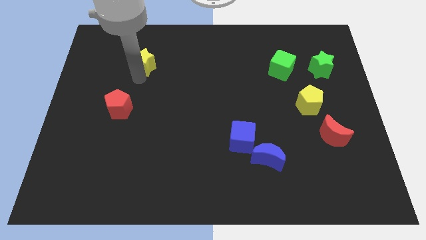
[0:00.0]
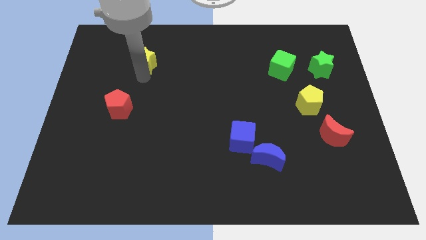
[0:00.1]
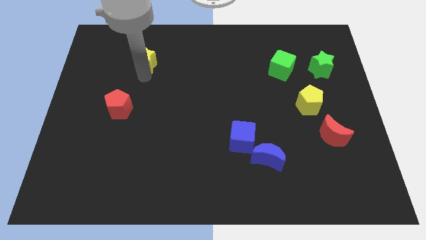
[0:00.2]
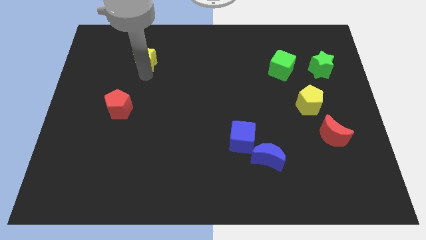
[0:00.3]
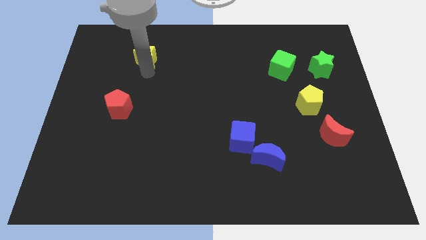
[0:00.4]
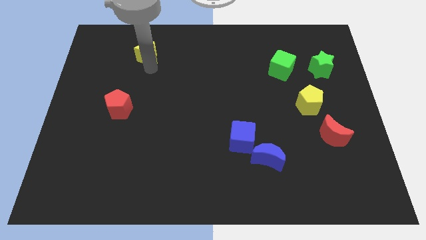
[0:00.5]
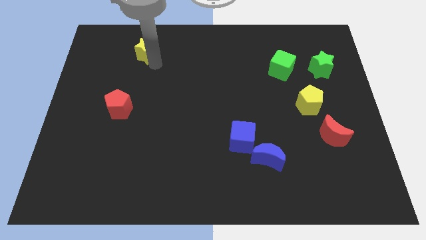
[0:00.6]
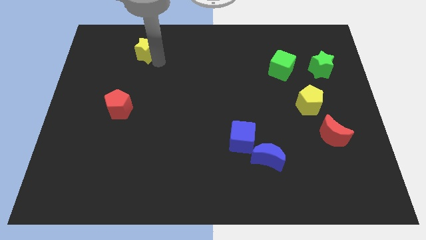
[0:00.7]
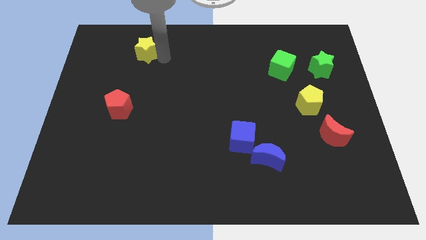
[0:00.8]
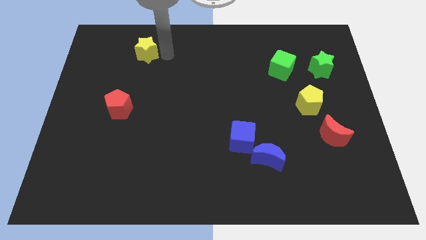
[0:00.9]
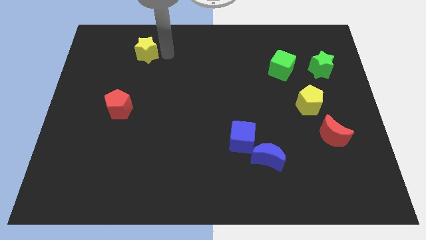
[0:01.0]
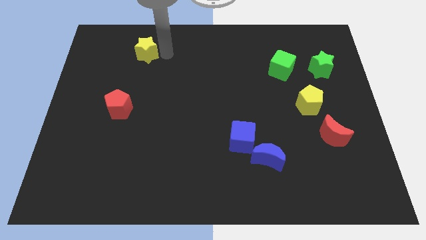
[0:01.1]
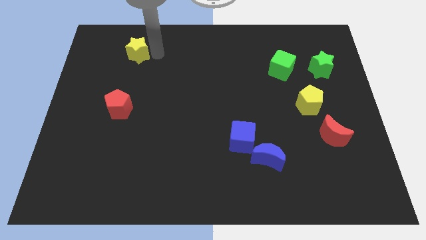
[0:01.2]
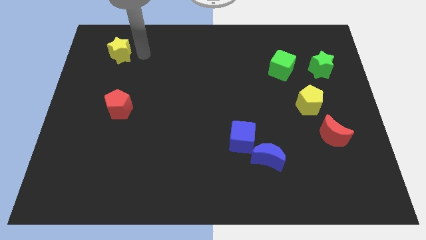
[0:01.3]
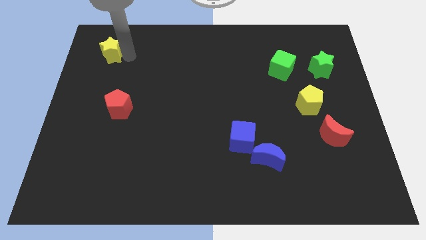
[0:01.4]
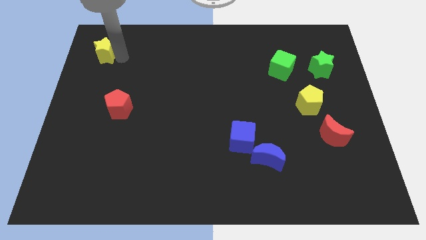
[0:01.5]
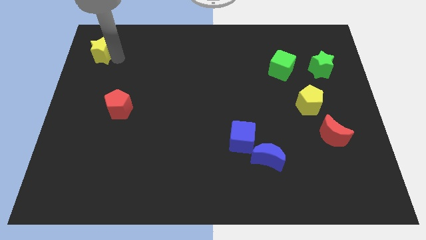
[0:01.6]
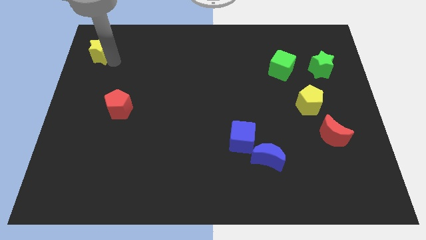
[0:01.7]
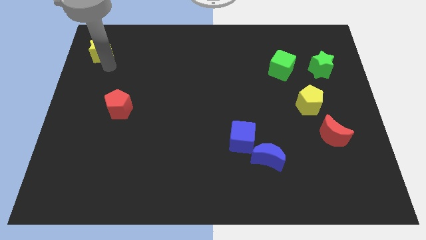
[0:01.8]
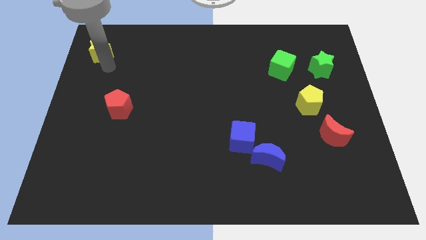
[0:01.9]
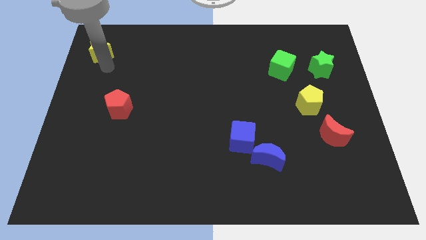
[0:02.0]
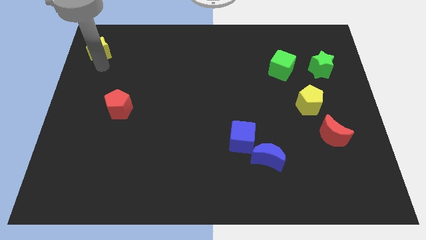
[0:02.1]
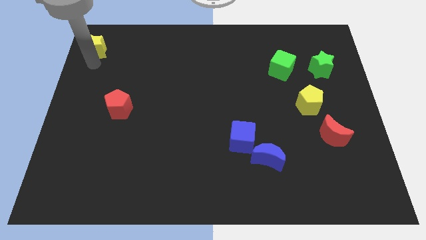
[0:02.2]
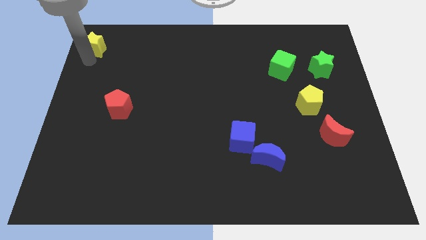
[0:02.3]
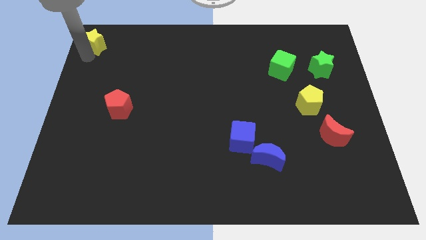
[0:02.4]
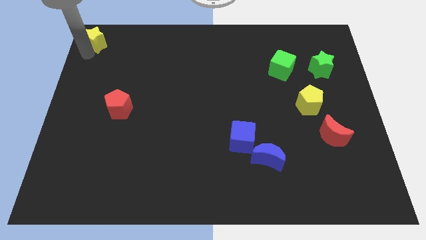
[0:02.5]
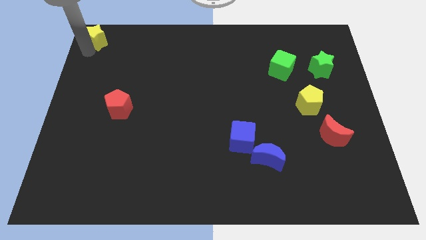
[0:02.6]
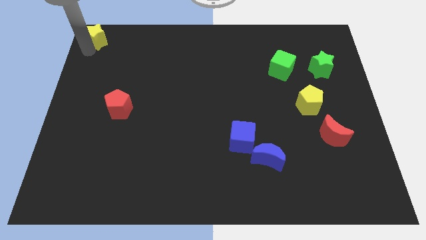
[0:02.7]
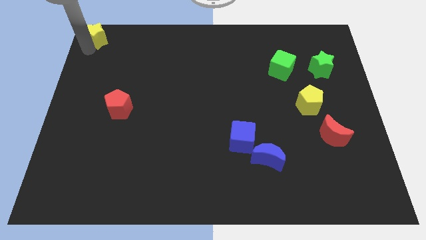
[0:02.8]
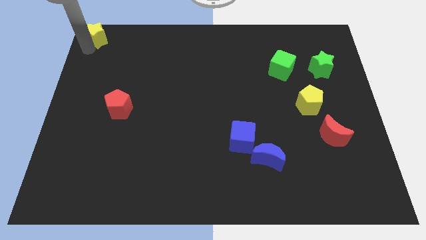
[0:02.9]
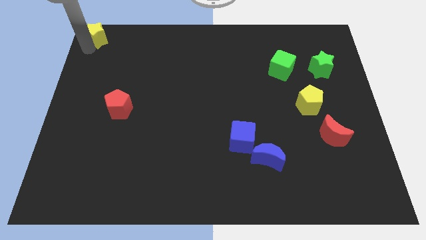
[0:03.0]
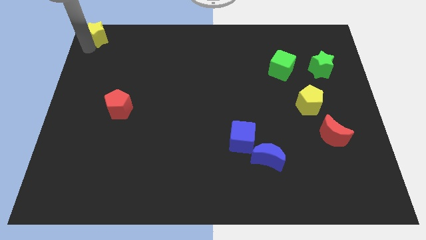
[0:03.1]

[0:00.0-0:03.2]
put the yellow star at the top left corner of the board

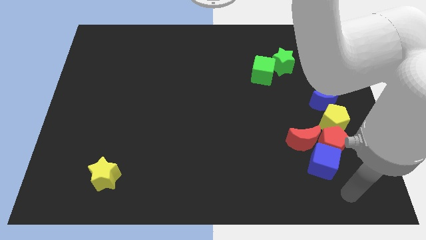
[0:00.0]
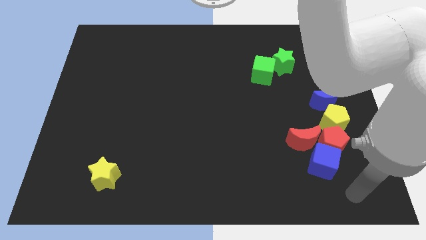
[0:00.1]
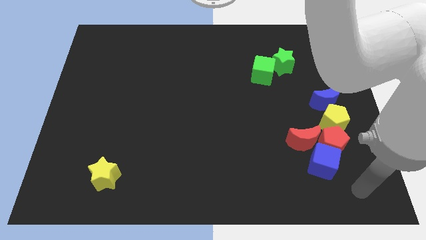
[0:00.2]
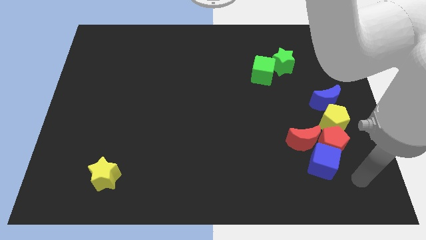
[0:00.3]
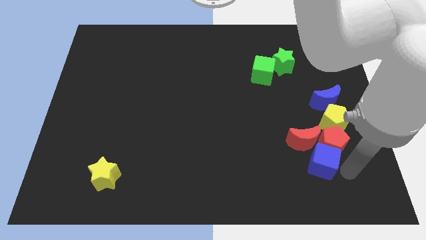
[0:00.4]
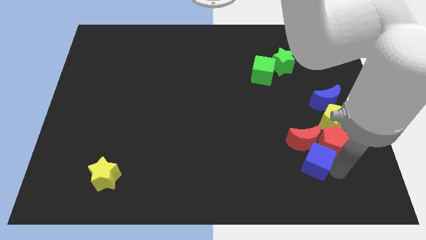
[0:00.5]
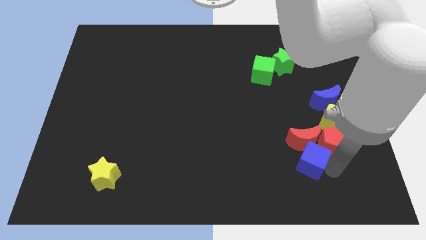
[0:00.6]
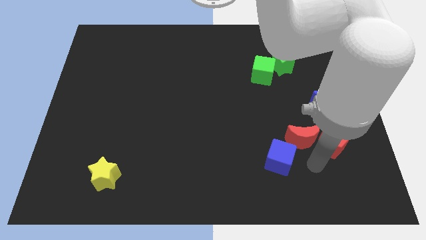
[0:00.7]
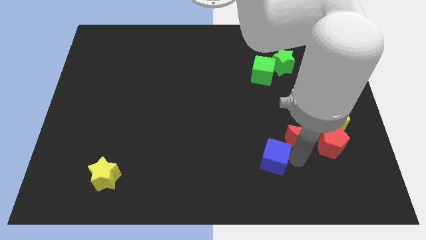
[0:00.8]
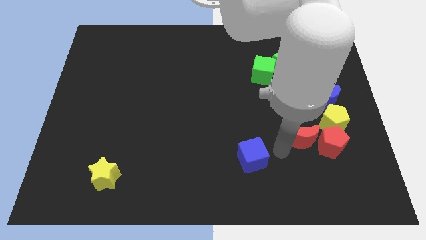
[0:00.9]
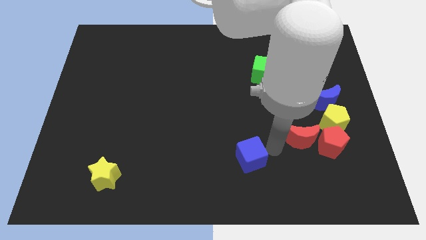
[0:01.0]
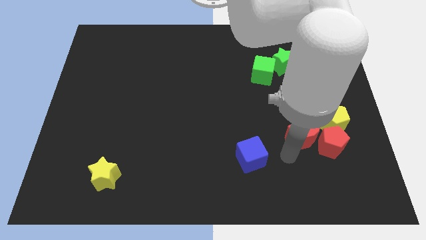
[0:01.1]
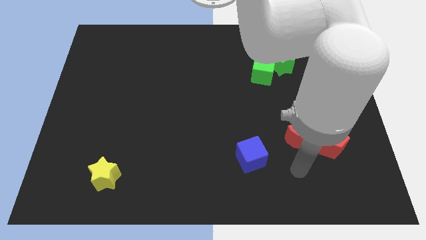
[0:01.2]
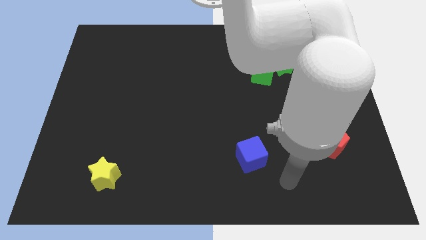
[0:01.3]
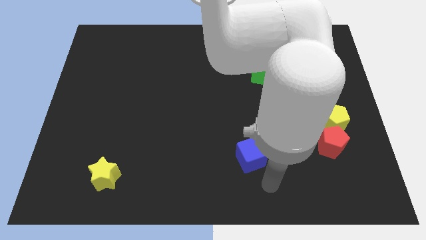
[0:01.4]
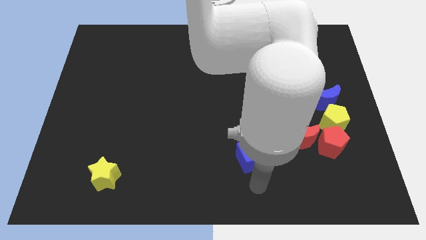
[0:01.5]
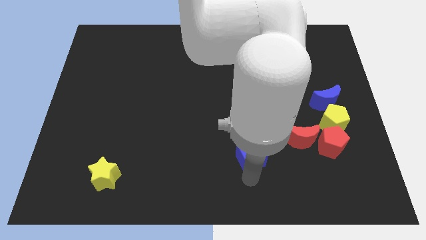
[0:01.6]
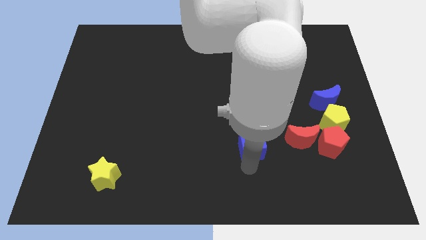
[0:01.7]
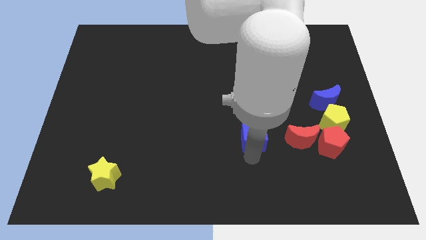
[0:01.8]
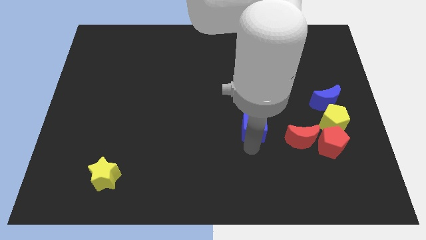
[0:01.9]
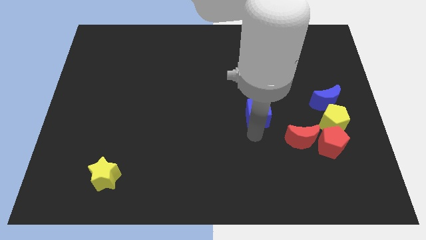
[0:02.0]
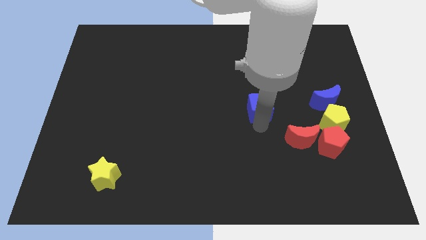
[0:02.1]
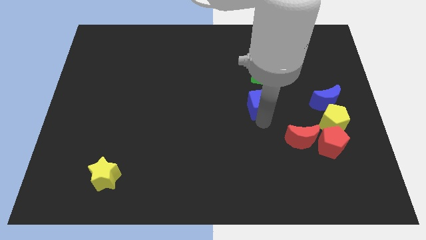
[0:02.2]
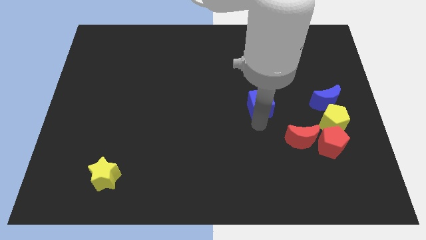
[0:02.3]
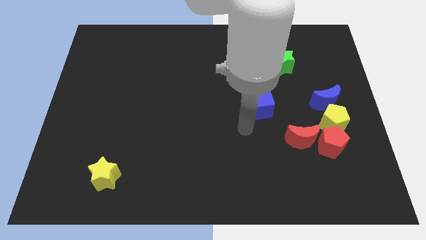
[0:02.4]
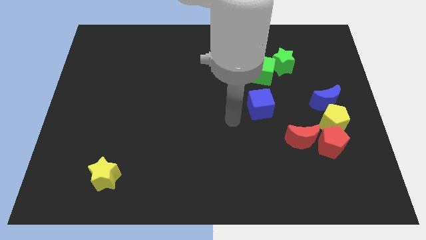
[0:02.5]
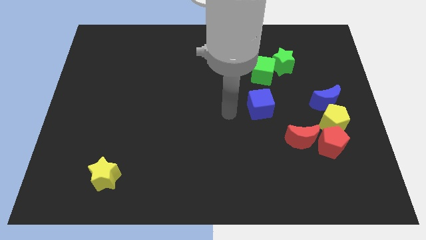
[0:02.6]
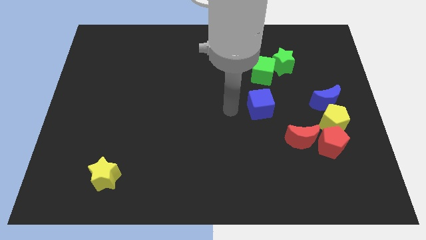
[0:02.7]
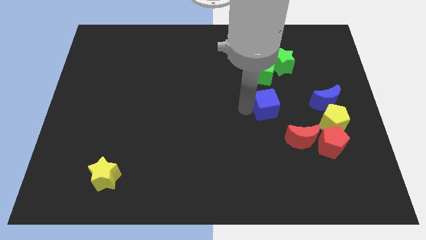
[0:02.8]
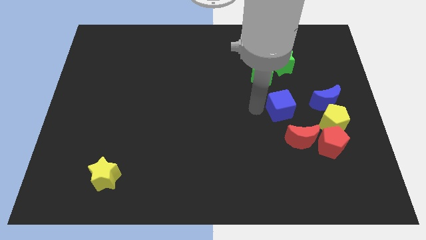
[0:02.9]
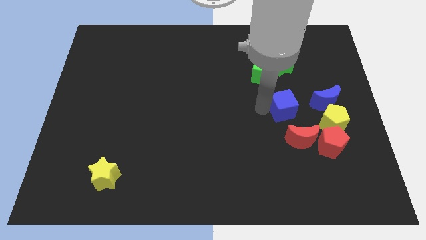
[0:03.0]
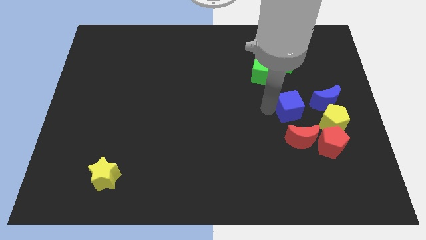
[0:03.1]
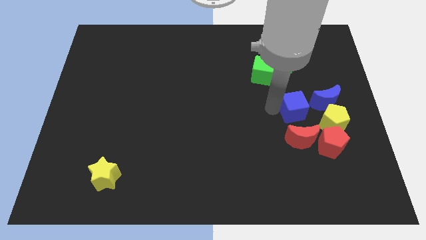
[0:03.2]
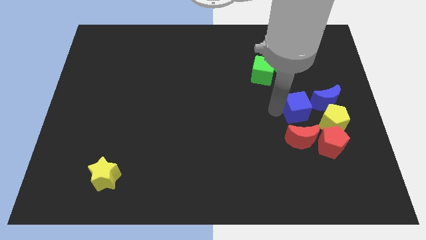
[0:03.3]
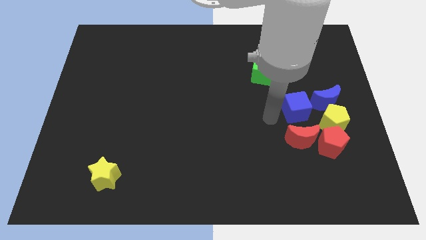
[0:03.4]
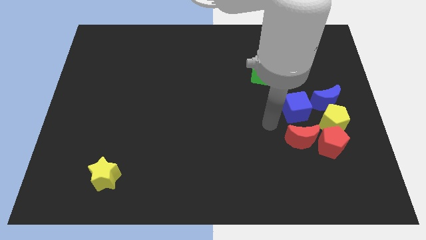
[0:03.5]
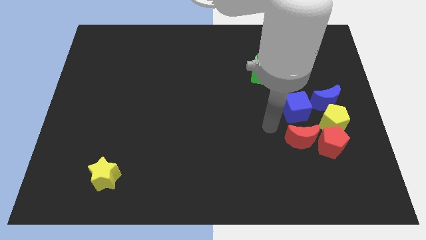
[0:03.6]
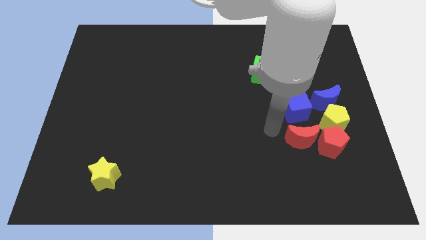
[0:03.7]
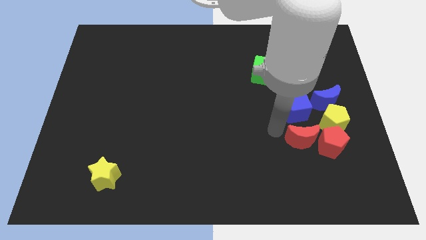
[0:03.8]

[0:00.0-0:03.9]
put the blue cube left to the blue moon

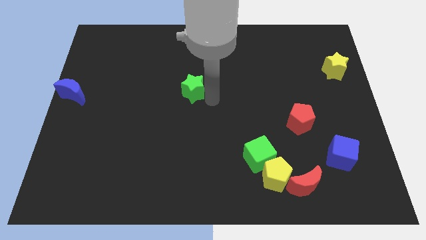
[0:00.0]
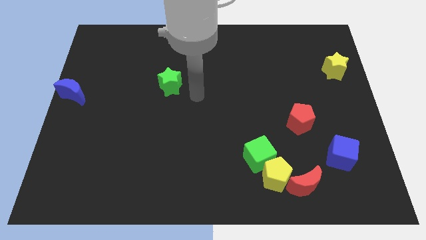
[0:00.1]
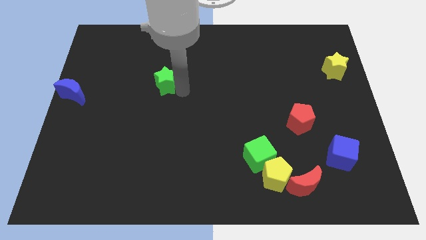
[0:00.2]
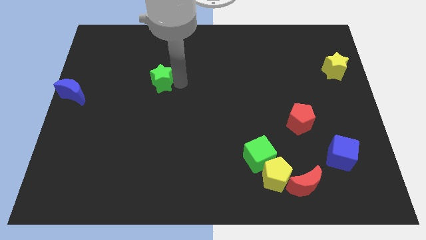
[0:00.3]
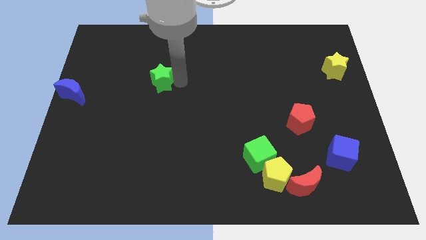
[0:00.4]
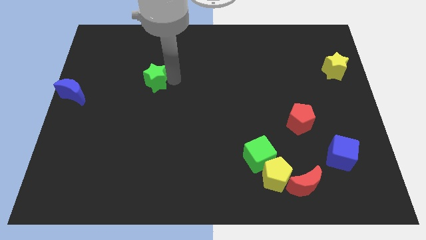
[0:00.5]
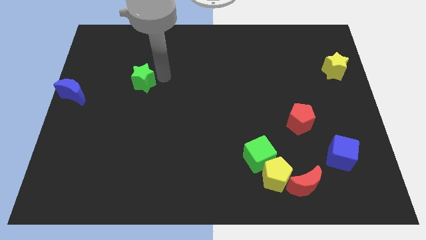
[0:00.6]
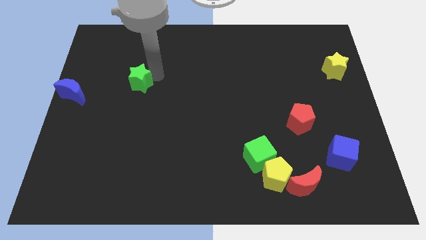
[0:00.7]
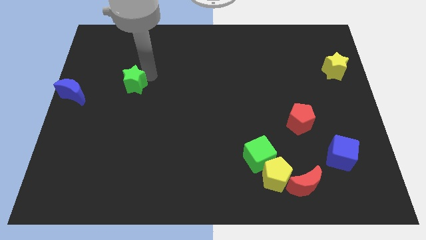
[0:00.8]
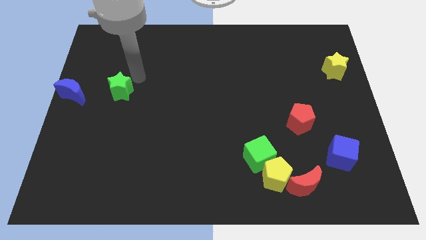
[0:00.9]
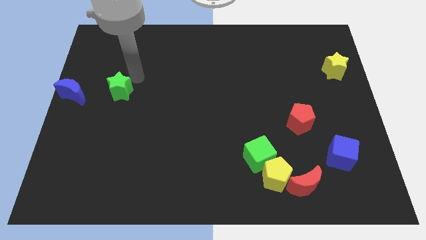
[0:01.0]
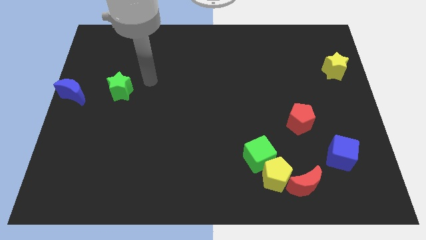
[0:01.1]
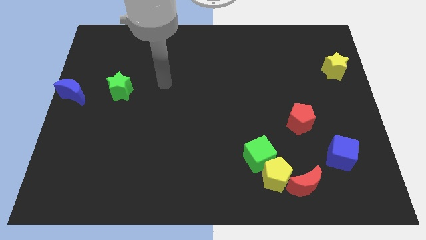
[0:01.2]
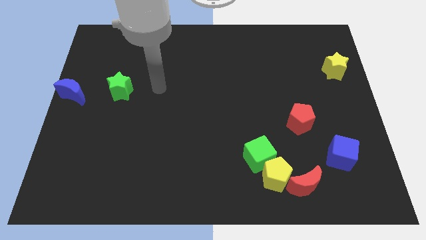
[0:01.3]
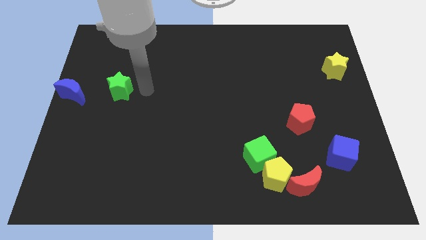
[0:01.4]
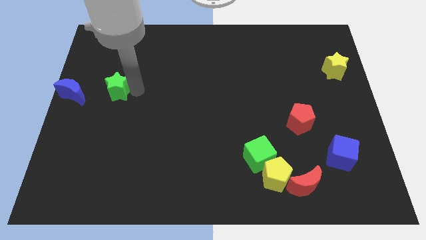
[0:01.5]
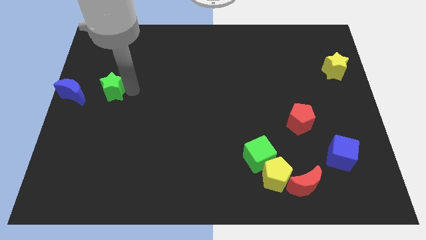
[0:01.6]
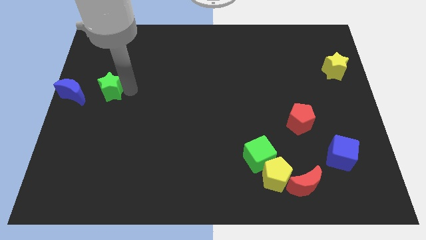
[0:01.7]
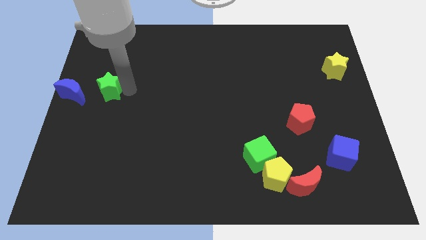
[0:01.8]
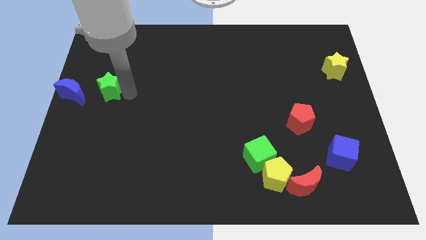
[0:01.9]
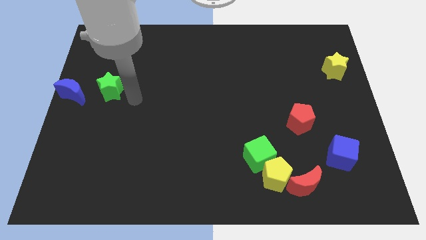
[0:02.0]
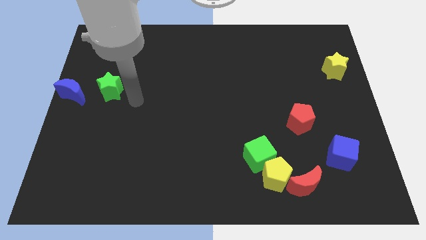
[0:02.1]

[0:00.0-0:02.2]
push the green star close to blue crescent
